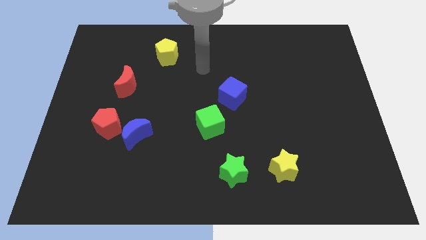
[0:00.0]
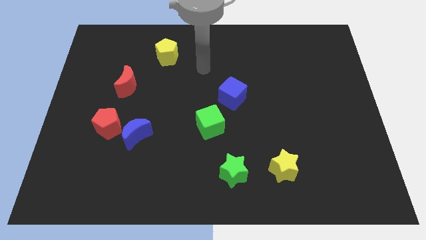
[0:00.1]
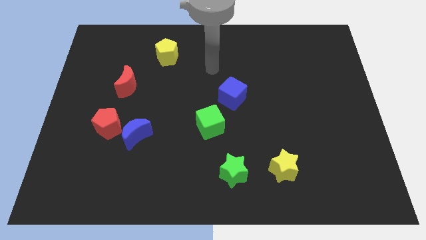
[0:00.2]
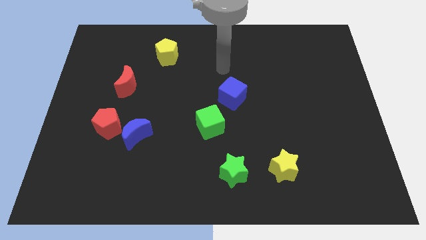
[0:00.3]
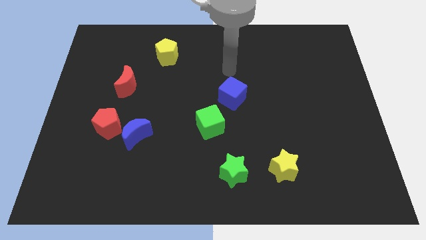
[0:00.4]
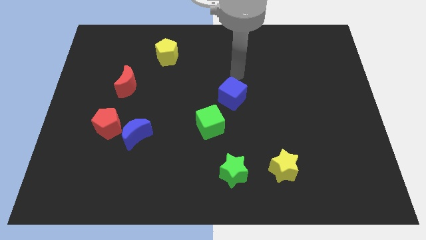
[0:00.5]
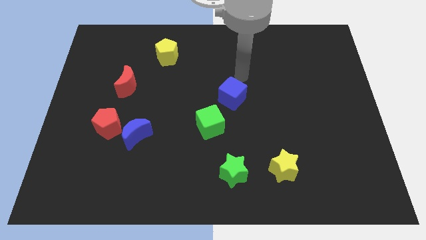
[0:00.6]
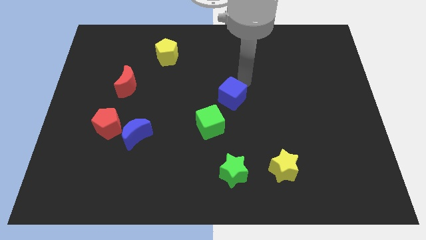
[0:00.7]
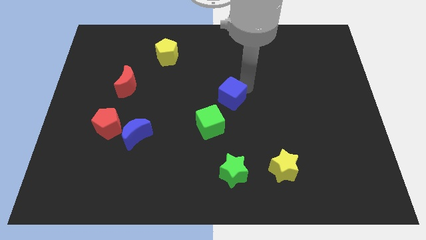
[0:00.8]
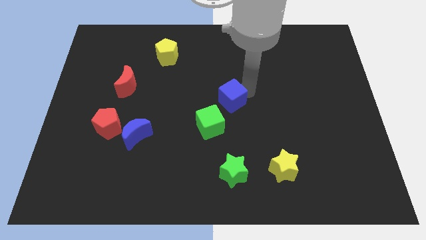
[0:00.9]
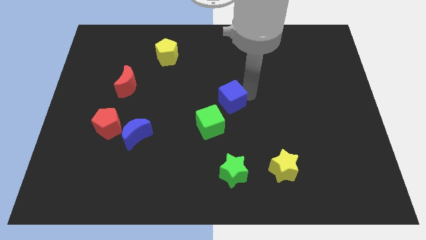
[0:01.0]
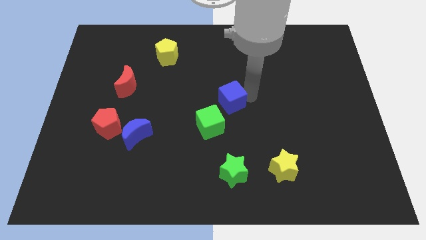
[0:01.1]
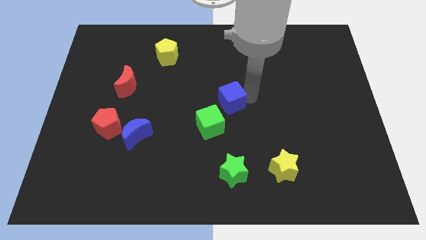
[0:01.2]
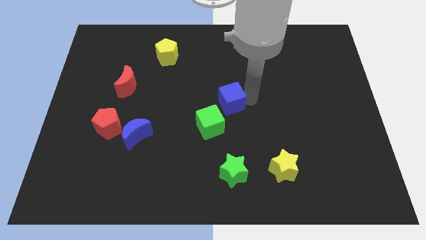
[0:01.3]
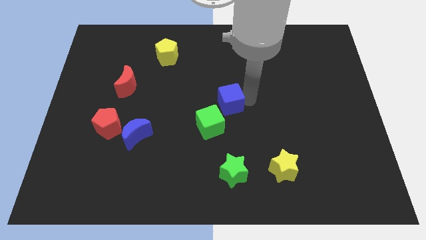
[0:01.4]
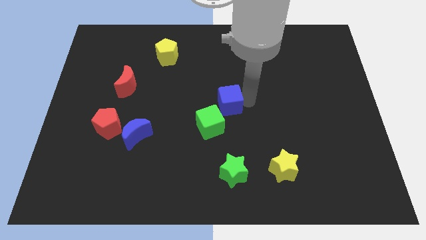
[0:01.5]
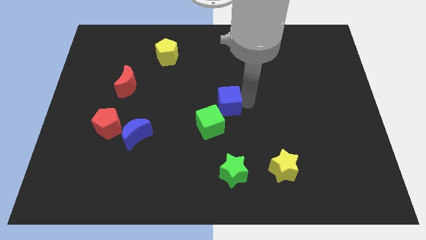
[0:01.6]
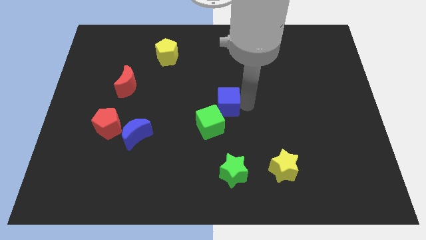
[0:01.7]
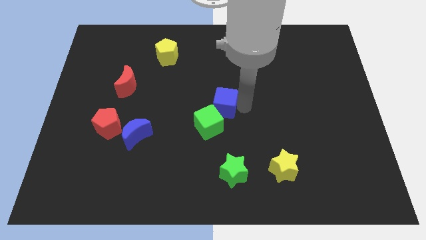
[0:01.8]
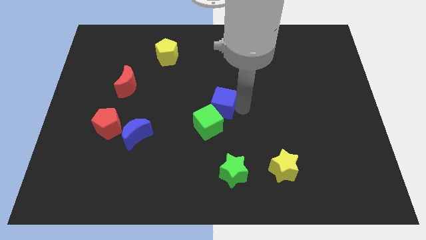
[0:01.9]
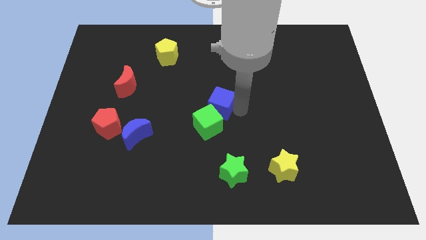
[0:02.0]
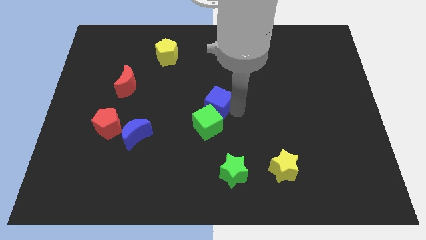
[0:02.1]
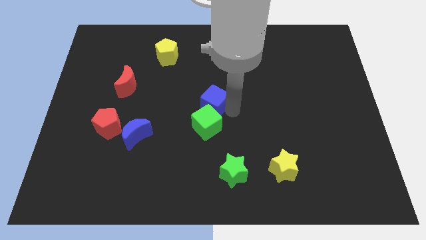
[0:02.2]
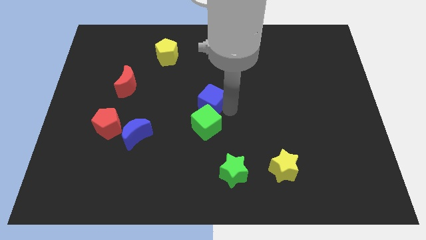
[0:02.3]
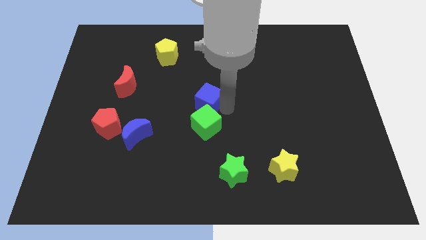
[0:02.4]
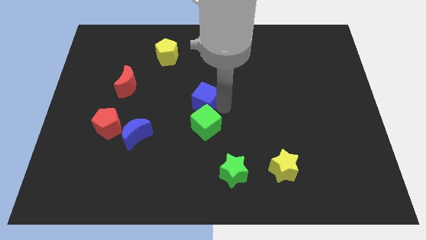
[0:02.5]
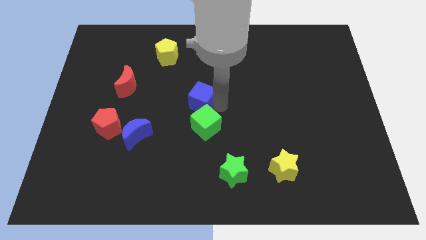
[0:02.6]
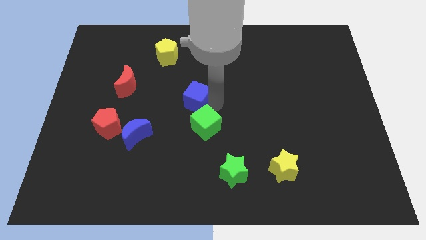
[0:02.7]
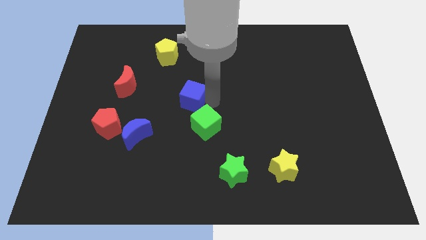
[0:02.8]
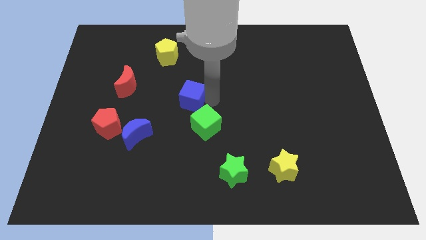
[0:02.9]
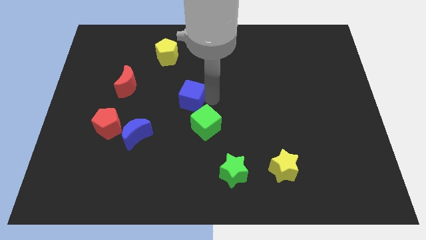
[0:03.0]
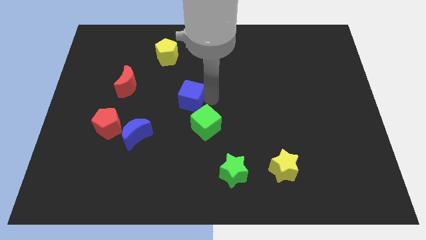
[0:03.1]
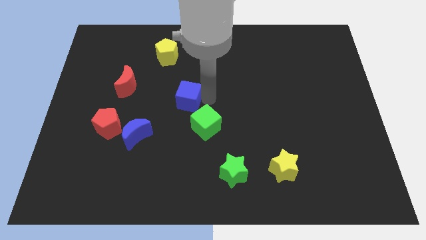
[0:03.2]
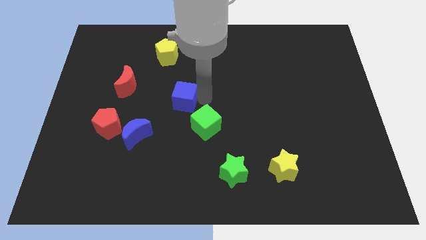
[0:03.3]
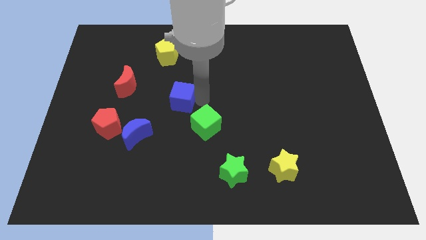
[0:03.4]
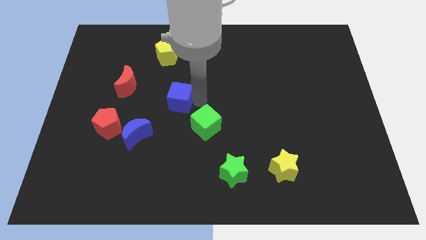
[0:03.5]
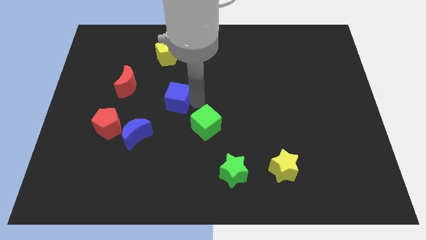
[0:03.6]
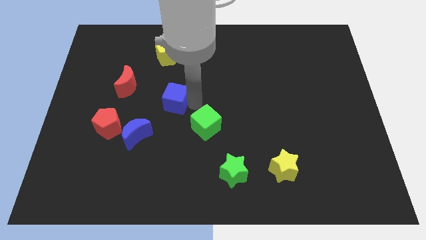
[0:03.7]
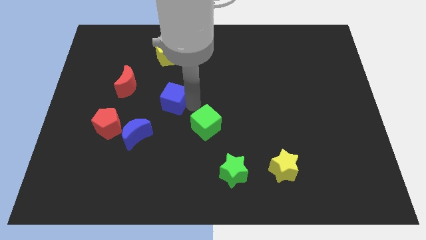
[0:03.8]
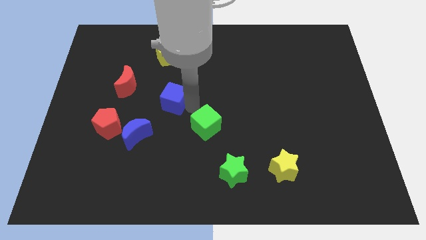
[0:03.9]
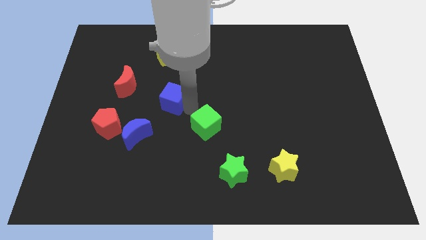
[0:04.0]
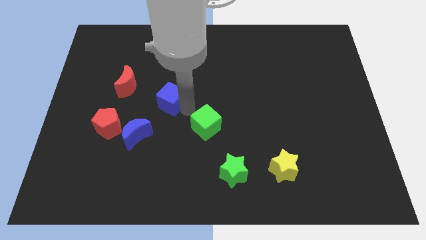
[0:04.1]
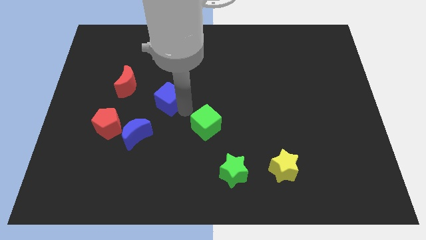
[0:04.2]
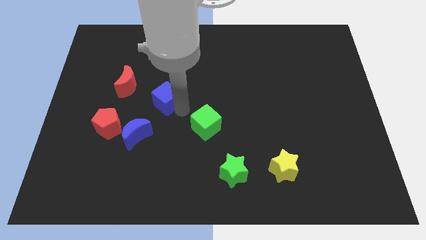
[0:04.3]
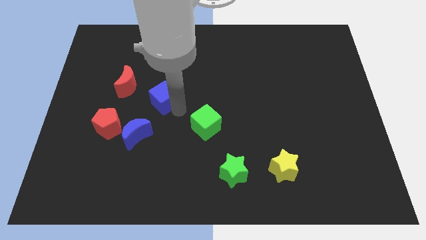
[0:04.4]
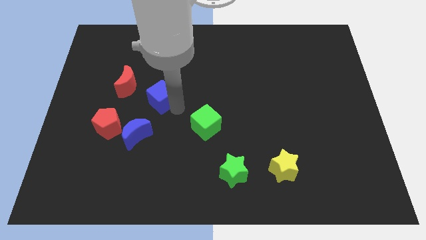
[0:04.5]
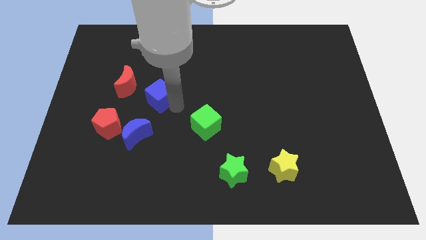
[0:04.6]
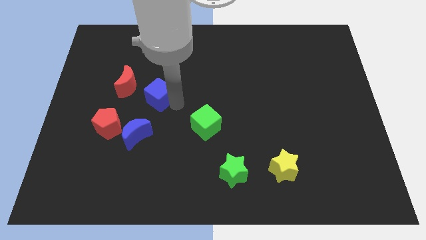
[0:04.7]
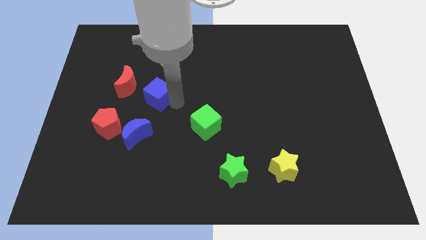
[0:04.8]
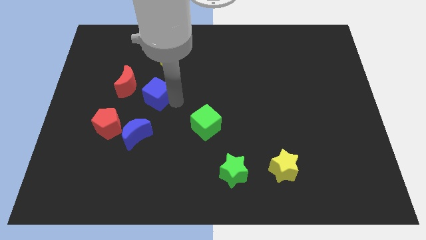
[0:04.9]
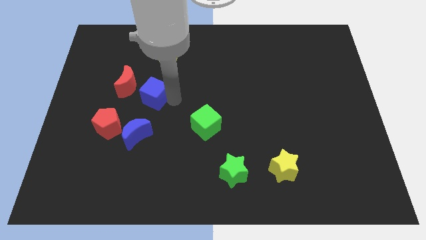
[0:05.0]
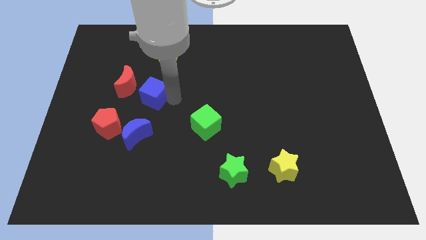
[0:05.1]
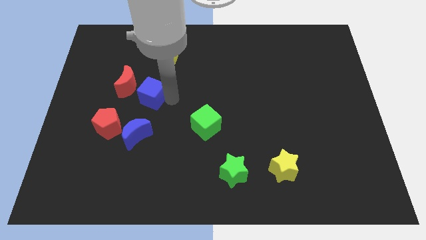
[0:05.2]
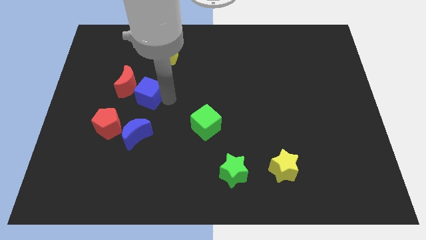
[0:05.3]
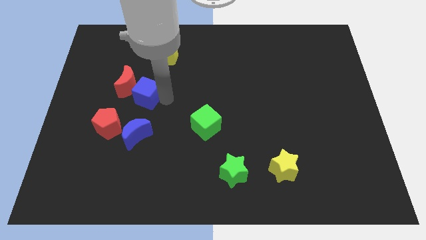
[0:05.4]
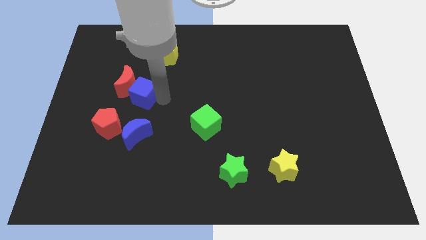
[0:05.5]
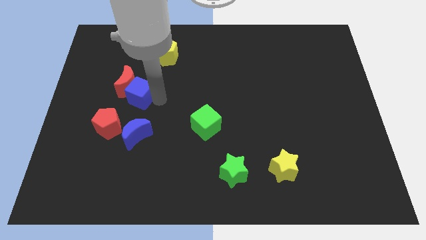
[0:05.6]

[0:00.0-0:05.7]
slide the blue cube next to the red moon

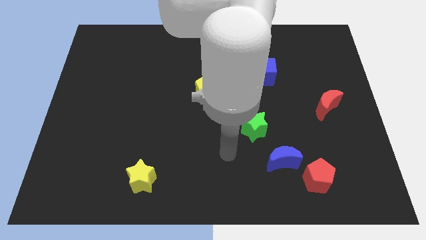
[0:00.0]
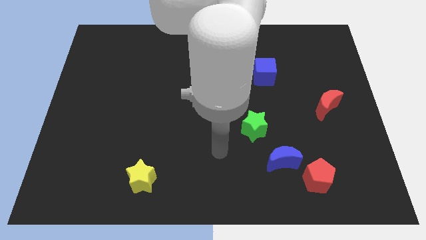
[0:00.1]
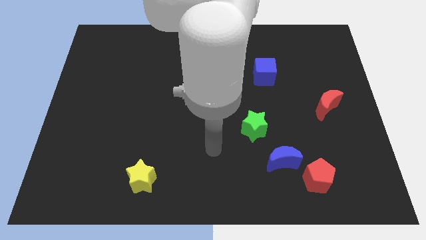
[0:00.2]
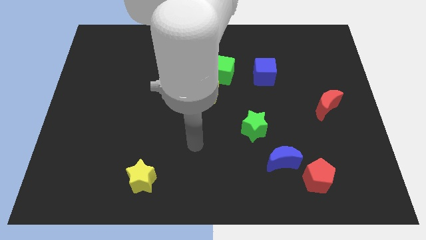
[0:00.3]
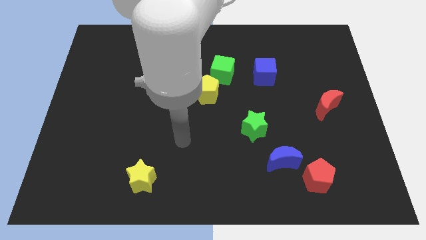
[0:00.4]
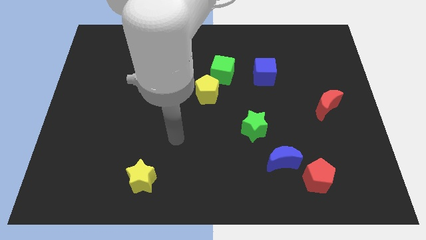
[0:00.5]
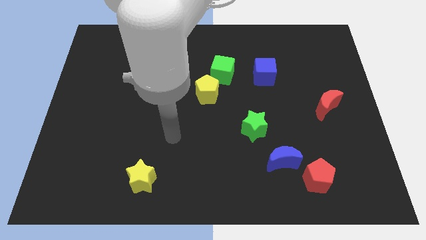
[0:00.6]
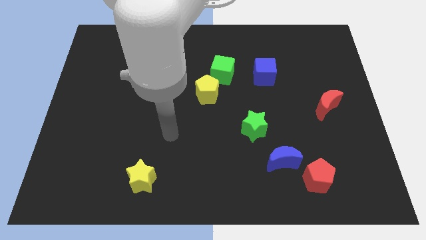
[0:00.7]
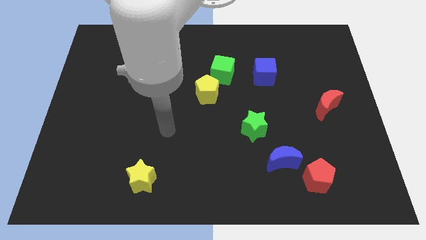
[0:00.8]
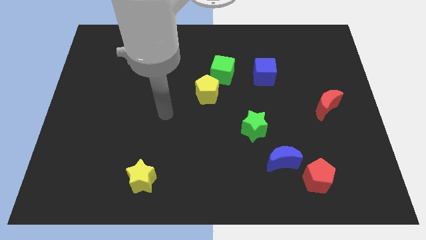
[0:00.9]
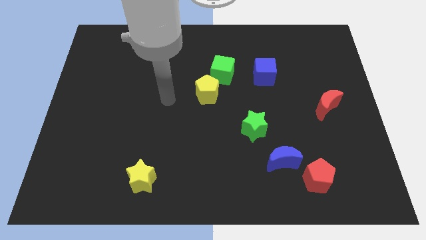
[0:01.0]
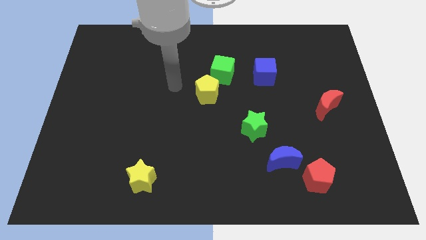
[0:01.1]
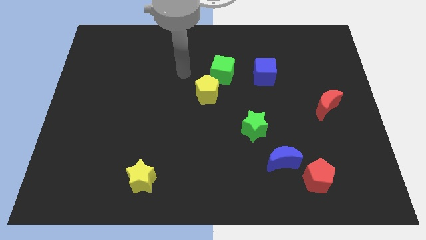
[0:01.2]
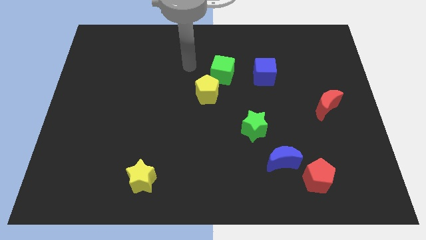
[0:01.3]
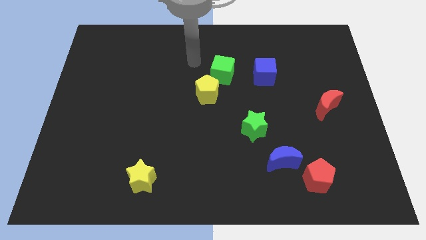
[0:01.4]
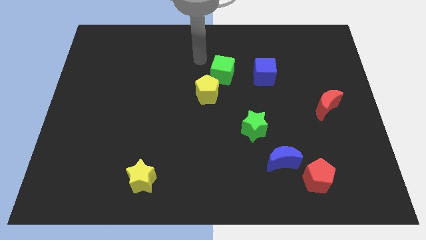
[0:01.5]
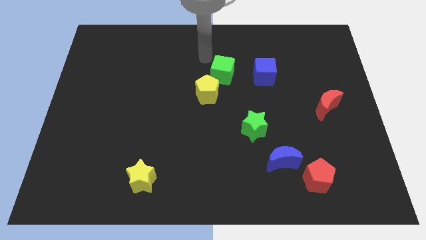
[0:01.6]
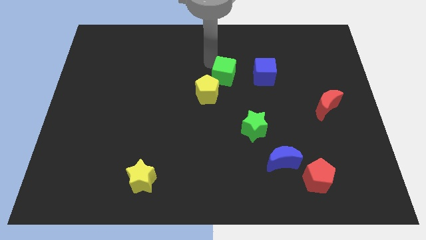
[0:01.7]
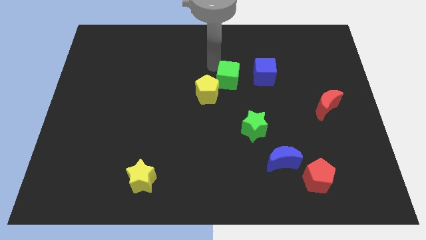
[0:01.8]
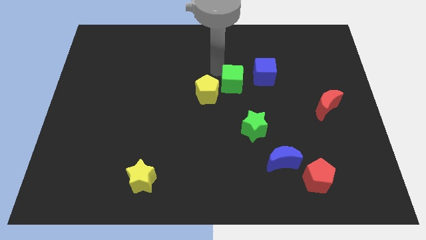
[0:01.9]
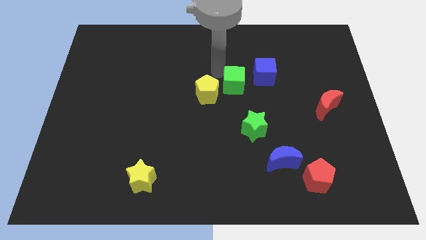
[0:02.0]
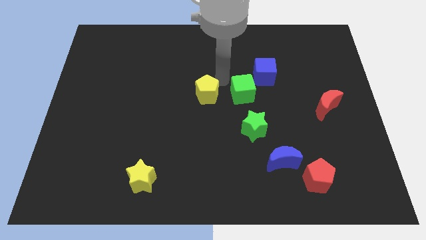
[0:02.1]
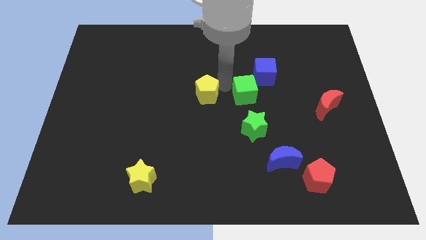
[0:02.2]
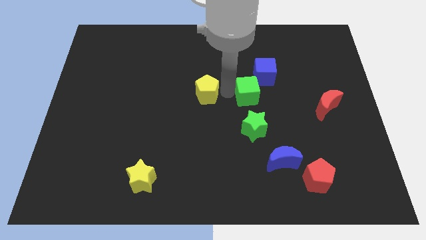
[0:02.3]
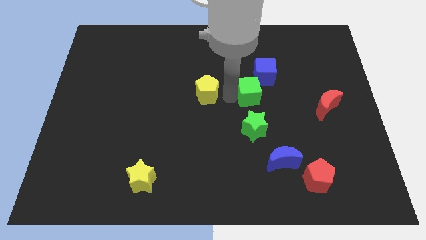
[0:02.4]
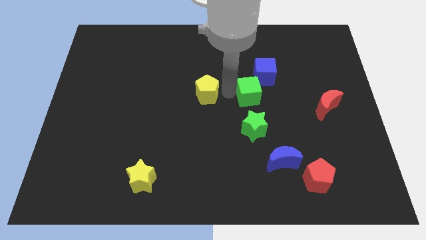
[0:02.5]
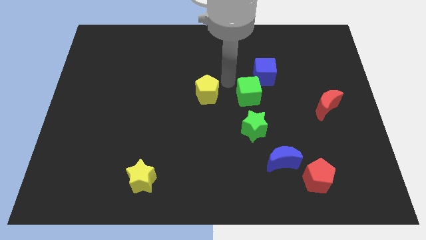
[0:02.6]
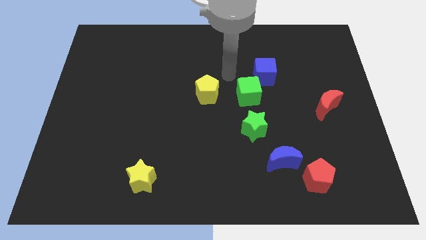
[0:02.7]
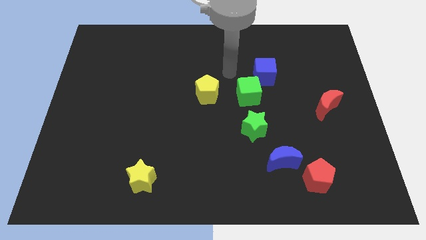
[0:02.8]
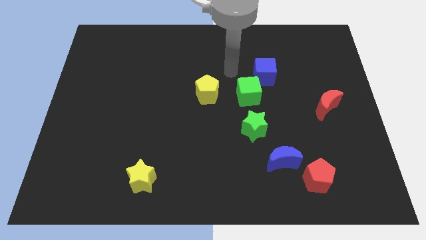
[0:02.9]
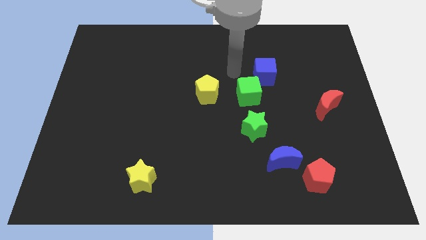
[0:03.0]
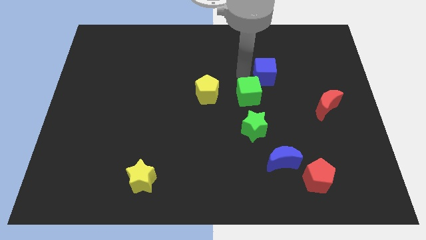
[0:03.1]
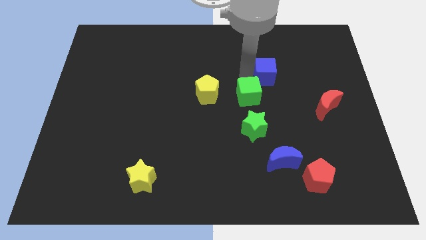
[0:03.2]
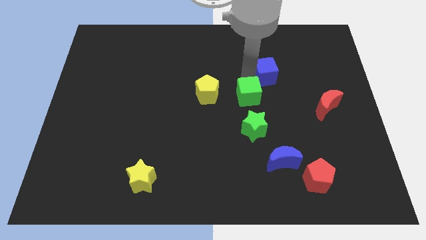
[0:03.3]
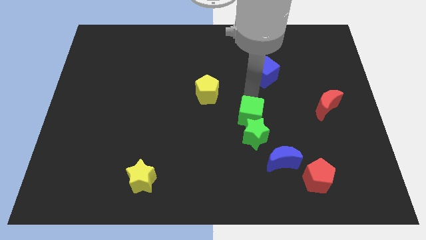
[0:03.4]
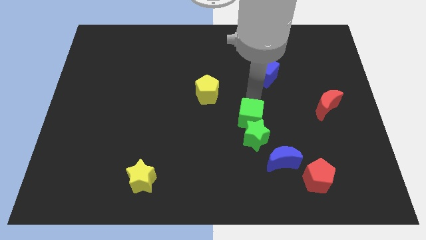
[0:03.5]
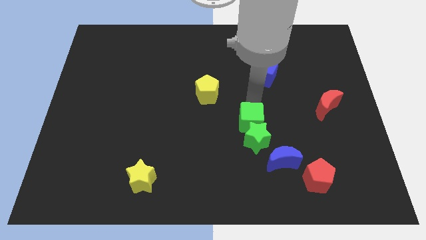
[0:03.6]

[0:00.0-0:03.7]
put the green cube towards the green star
